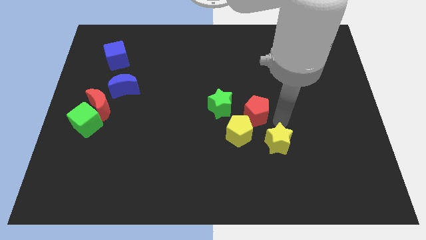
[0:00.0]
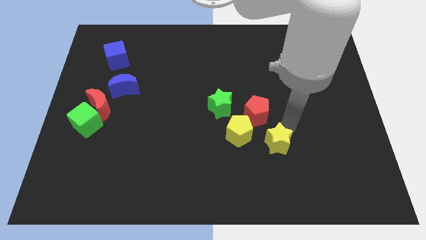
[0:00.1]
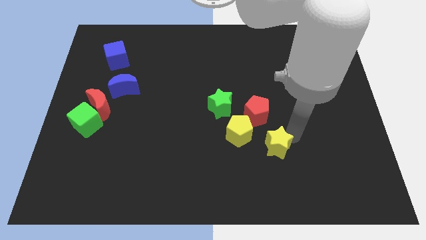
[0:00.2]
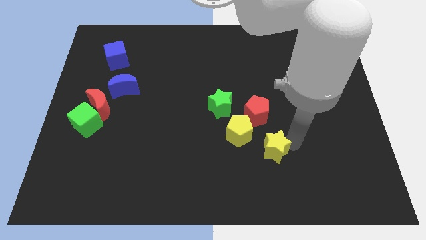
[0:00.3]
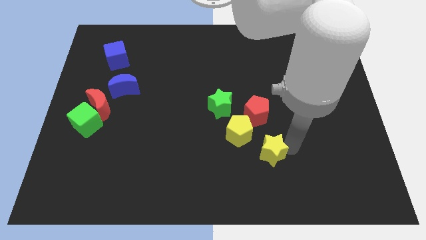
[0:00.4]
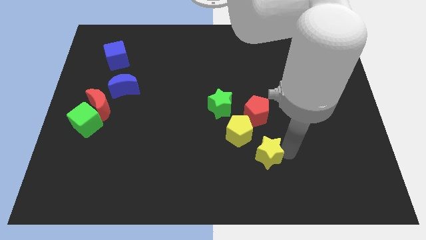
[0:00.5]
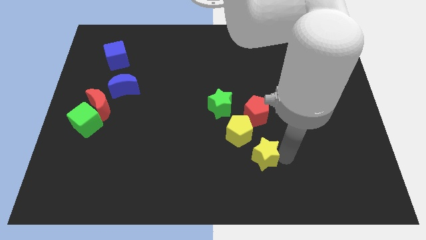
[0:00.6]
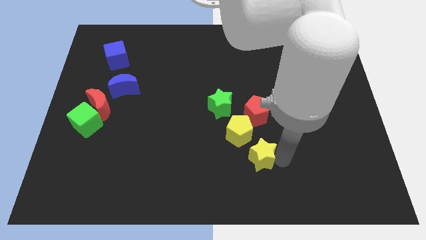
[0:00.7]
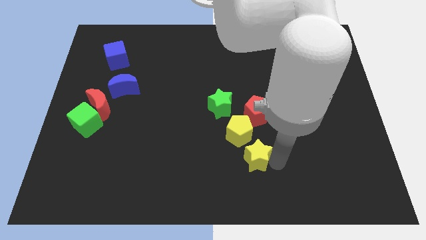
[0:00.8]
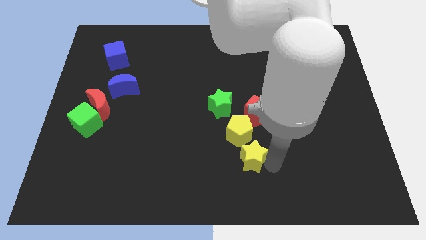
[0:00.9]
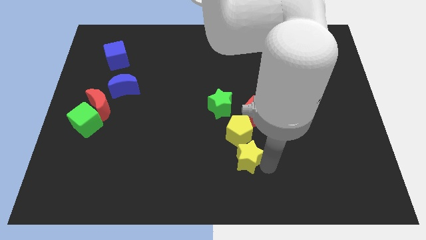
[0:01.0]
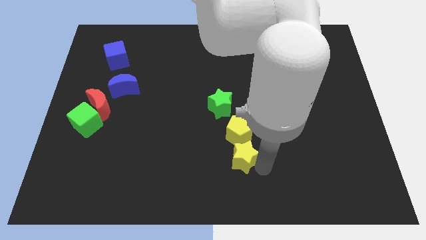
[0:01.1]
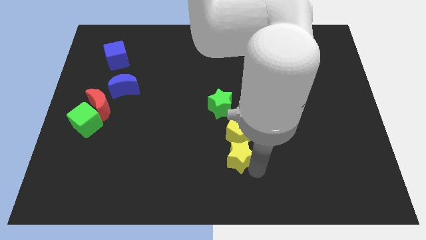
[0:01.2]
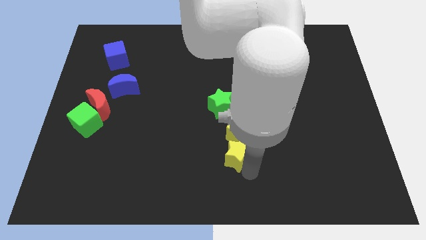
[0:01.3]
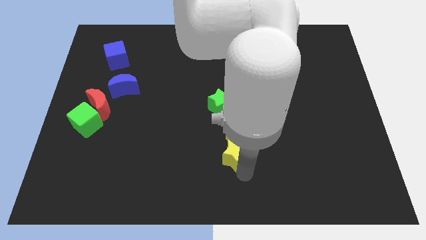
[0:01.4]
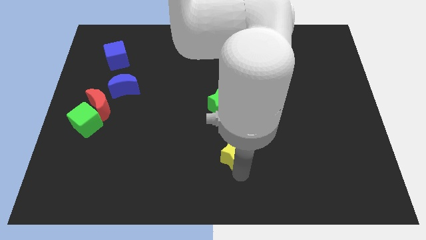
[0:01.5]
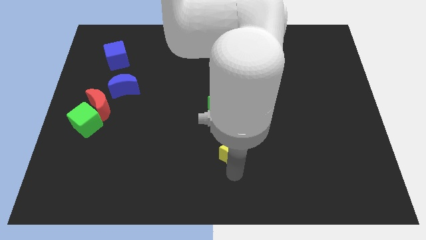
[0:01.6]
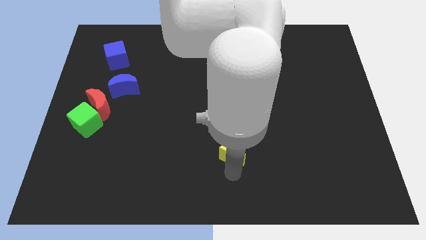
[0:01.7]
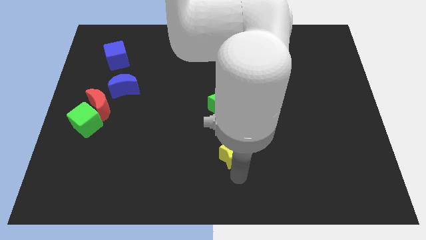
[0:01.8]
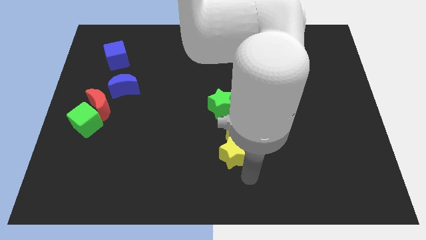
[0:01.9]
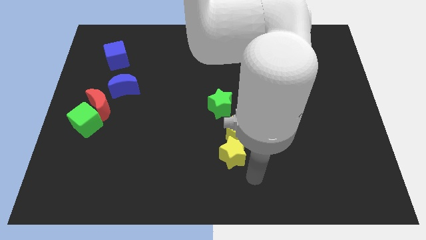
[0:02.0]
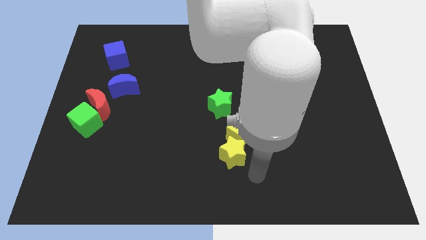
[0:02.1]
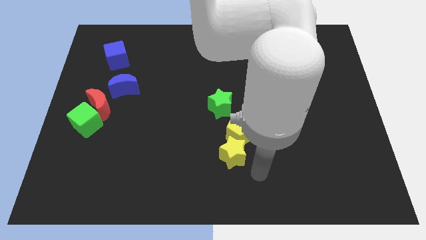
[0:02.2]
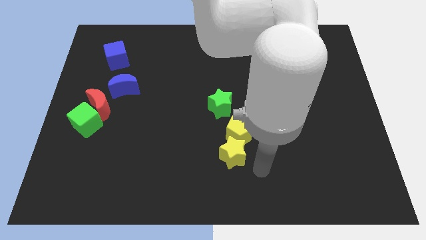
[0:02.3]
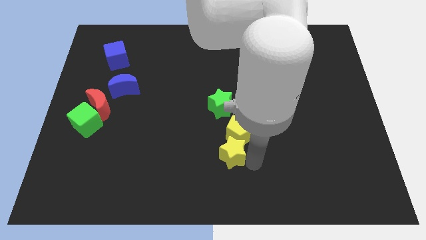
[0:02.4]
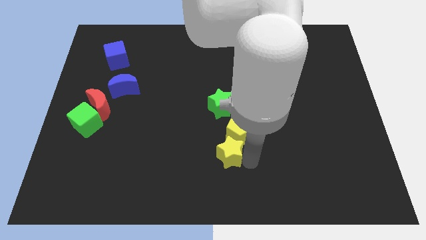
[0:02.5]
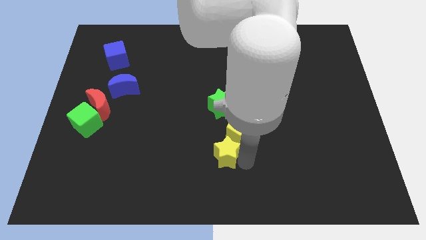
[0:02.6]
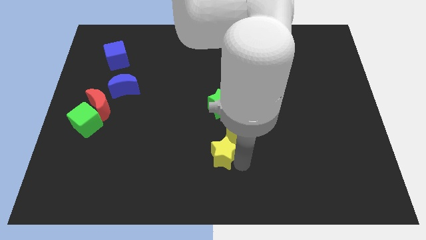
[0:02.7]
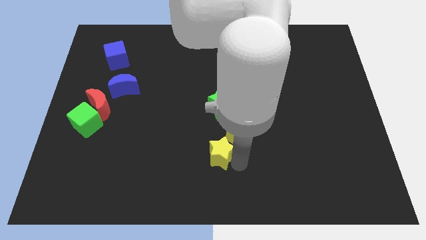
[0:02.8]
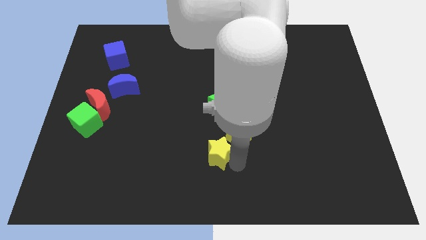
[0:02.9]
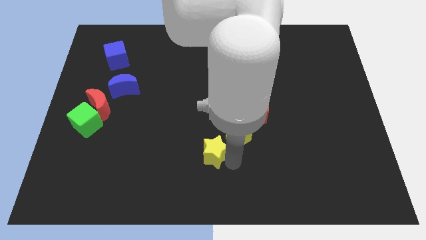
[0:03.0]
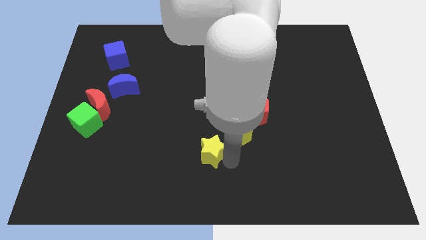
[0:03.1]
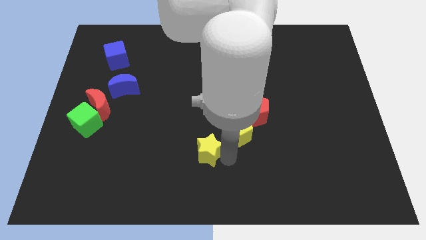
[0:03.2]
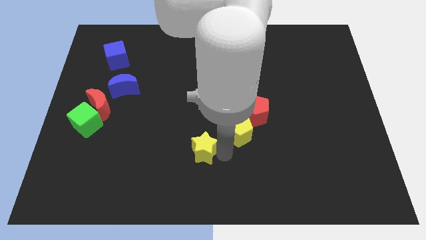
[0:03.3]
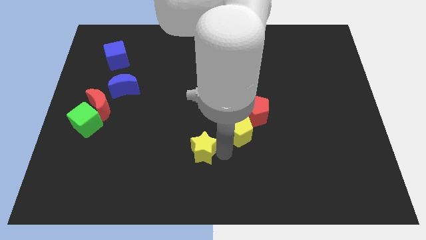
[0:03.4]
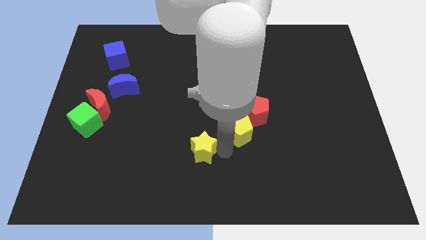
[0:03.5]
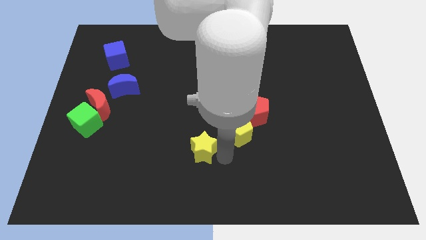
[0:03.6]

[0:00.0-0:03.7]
place the yellow star diagonally to the yellow pentagon

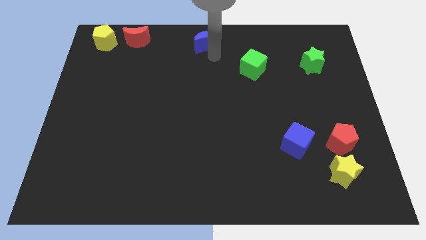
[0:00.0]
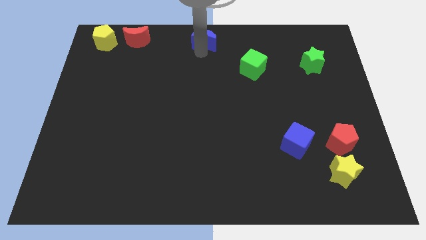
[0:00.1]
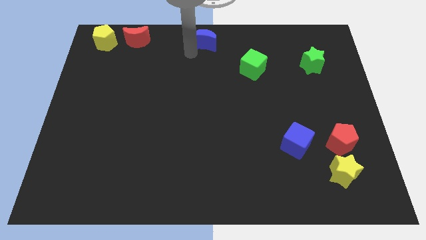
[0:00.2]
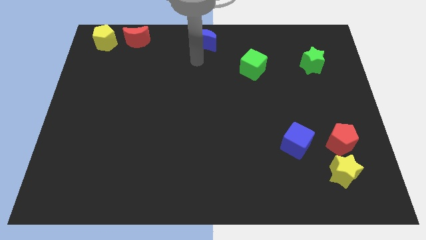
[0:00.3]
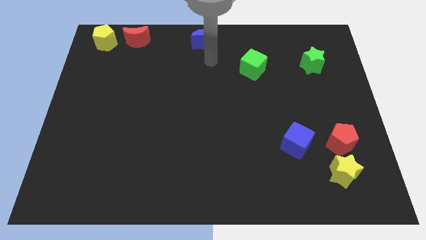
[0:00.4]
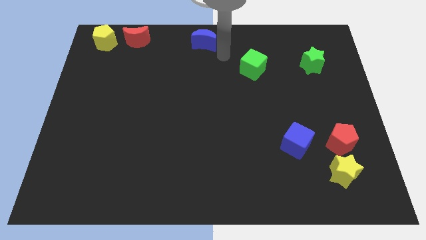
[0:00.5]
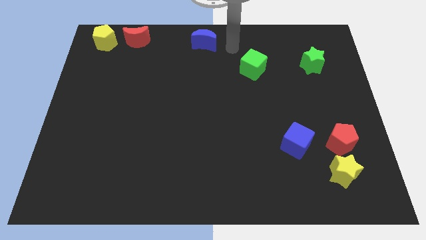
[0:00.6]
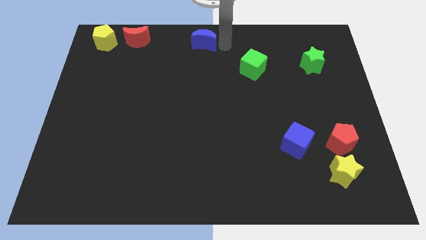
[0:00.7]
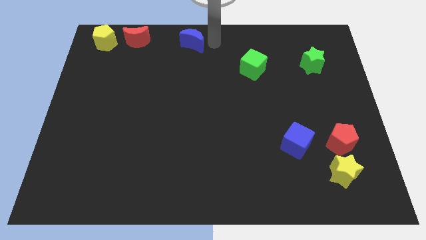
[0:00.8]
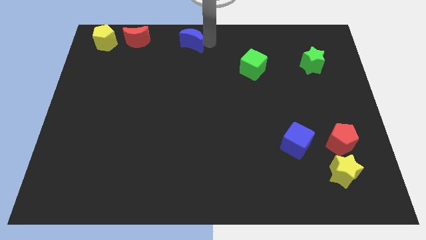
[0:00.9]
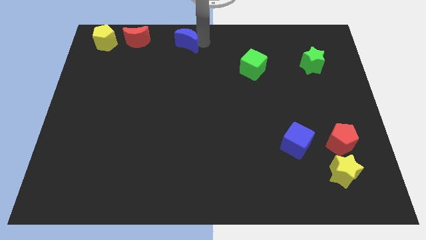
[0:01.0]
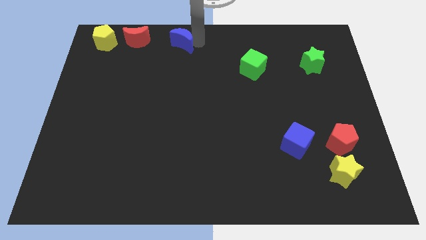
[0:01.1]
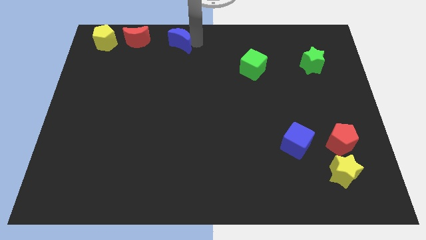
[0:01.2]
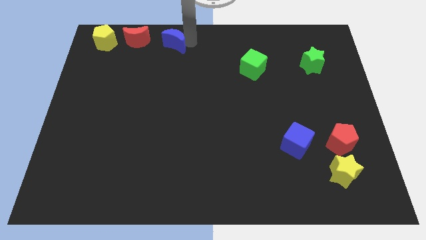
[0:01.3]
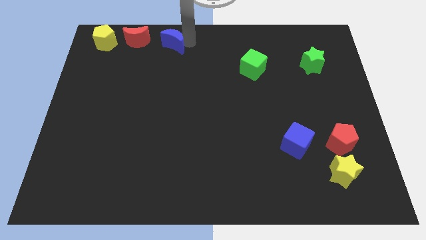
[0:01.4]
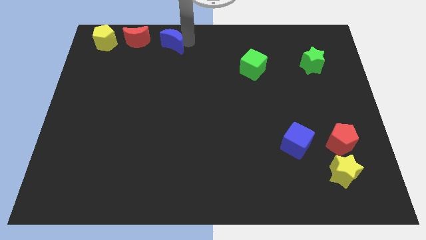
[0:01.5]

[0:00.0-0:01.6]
push the blue moon towards the red moon

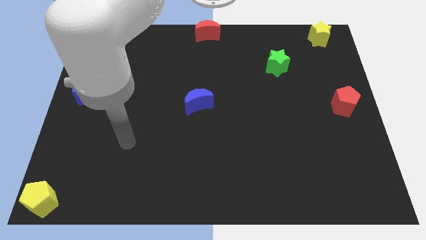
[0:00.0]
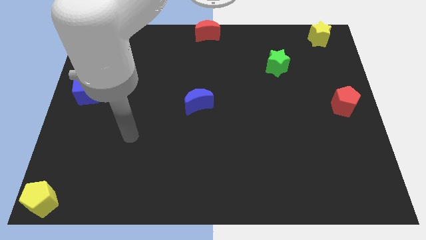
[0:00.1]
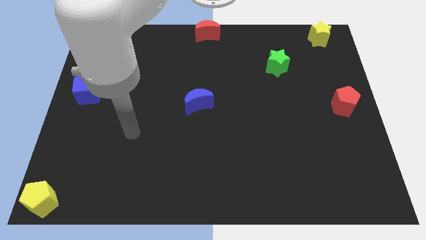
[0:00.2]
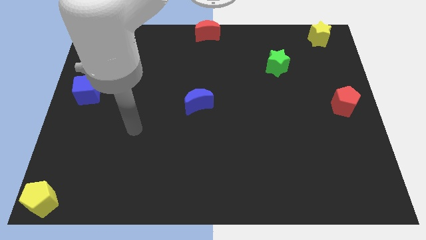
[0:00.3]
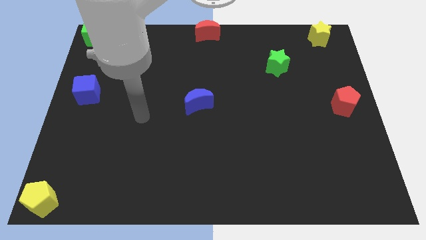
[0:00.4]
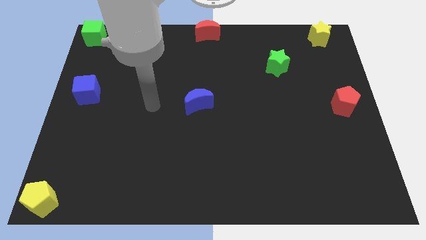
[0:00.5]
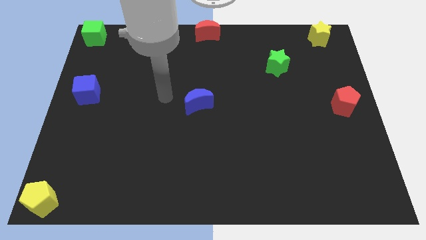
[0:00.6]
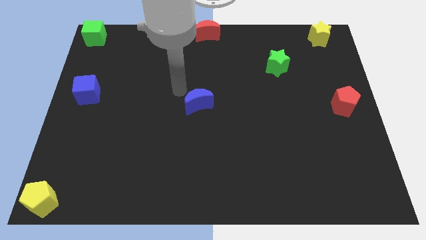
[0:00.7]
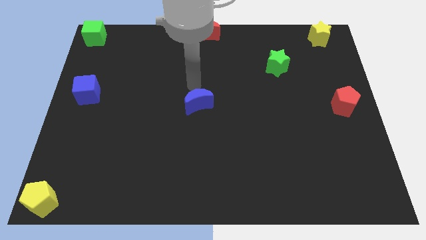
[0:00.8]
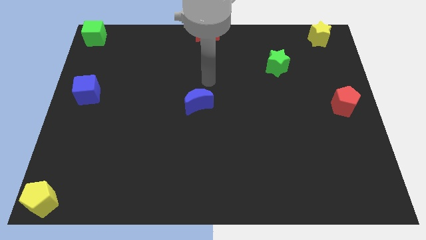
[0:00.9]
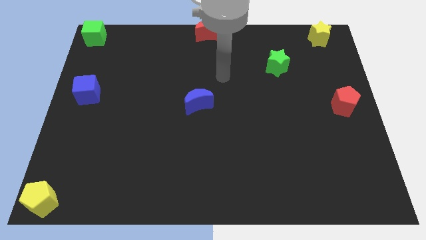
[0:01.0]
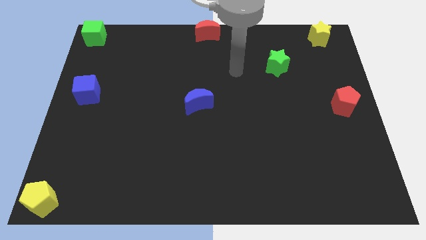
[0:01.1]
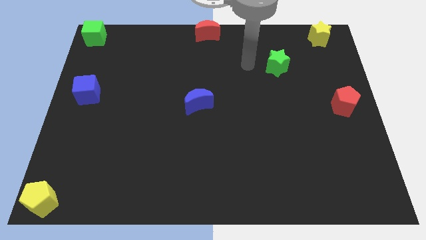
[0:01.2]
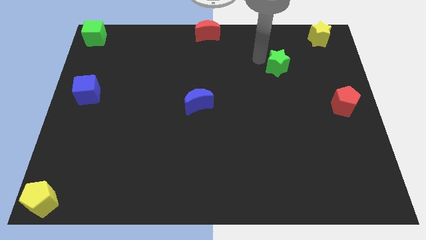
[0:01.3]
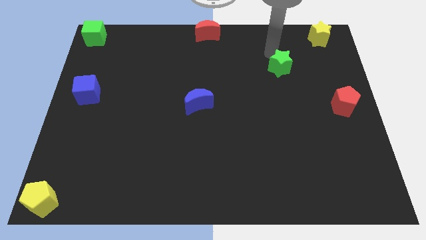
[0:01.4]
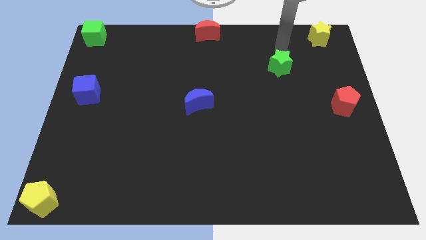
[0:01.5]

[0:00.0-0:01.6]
tap the top side of the green star

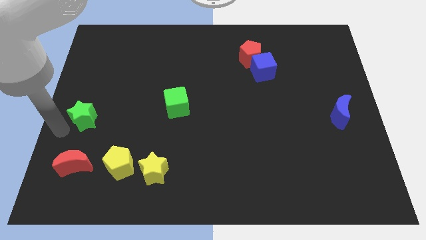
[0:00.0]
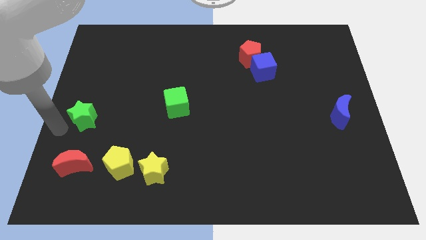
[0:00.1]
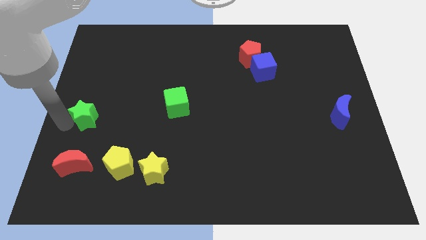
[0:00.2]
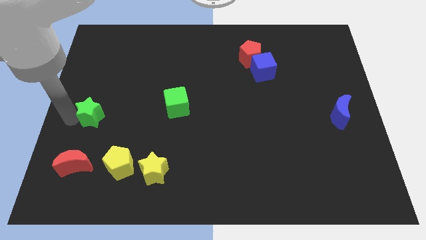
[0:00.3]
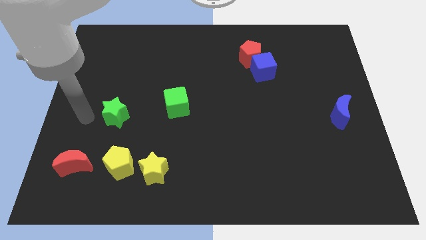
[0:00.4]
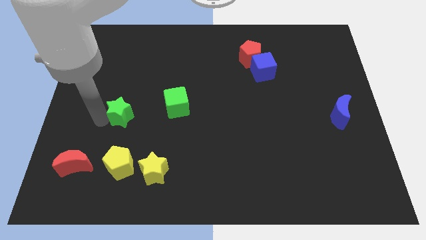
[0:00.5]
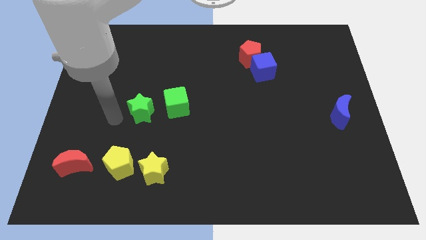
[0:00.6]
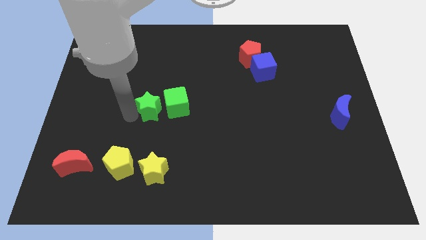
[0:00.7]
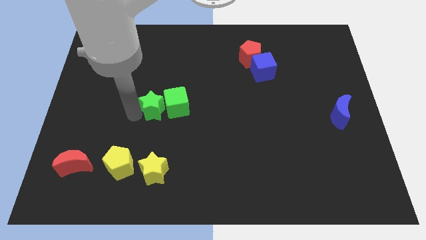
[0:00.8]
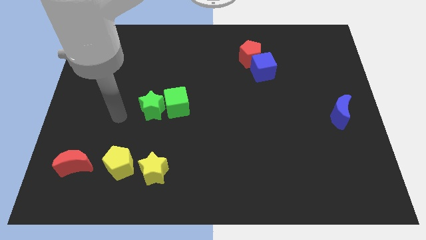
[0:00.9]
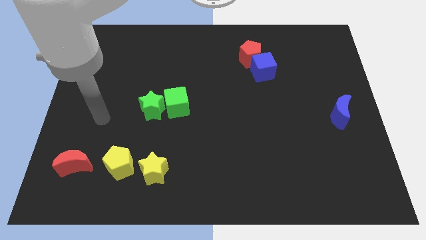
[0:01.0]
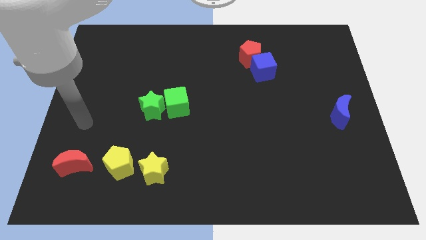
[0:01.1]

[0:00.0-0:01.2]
move the green star left to the green cube

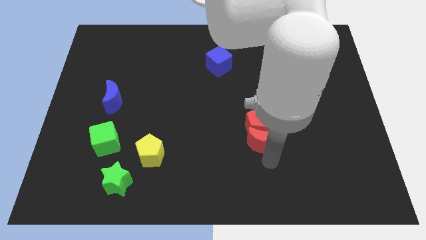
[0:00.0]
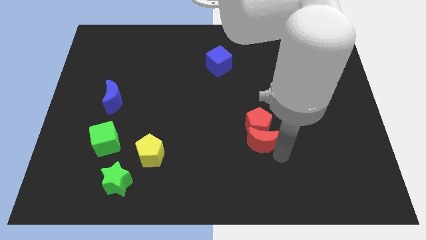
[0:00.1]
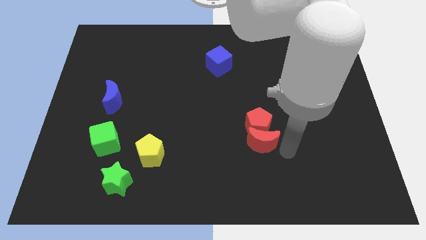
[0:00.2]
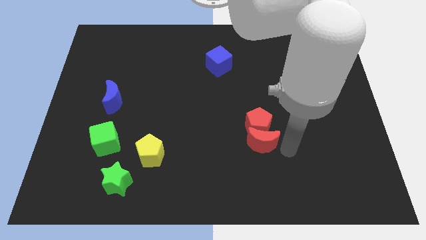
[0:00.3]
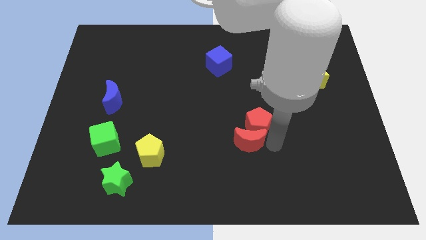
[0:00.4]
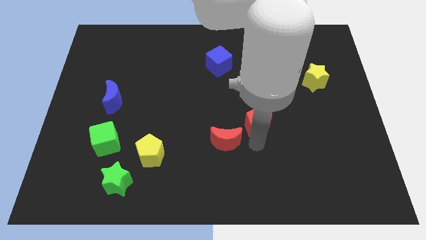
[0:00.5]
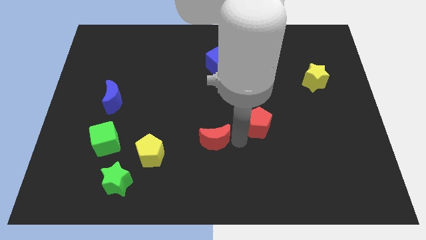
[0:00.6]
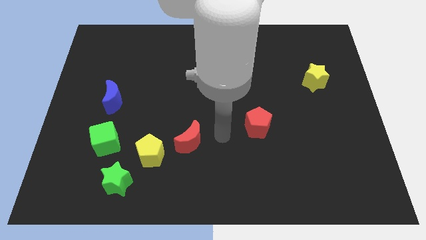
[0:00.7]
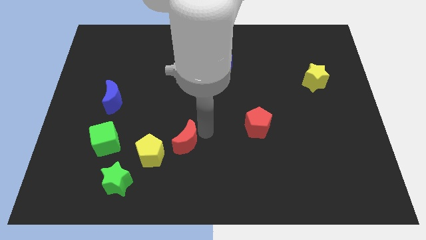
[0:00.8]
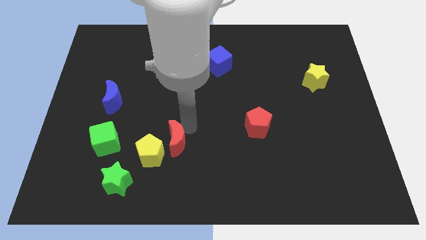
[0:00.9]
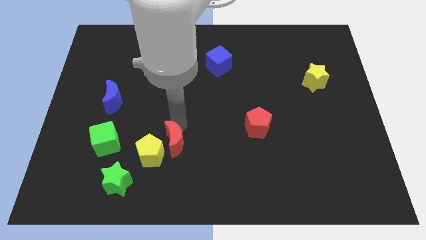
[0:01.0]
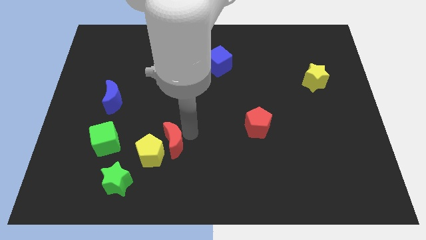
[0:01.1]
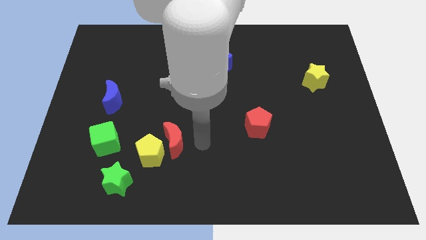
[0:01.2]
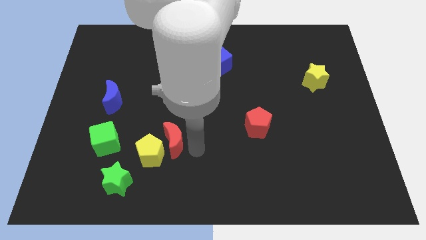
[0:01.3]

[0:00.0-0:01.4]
move the red crescent right above the yellow pentagon
